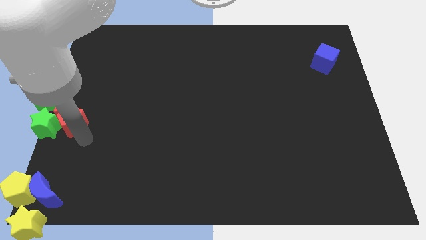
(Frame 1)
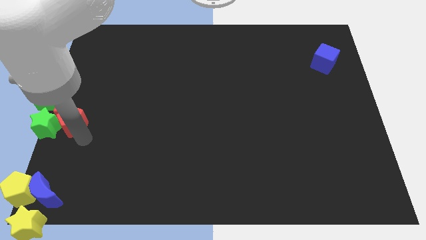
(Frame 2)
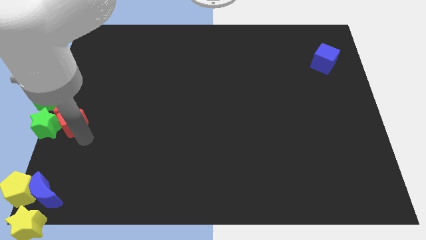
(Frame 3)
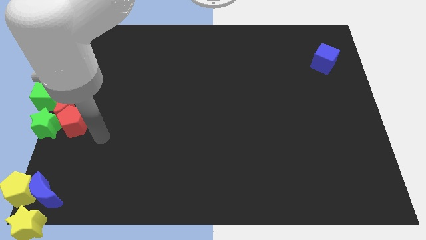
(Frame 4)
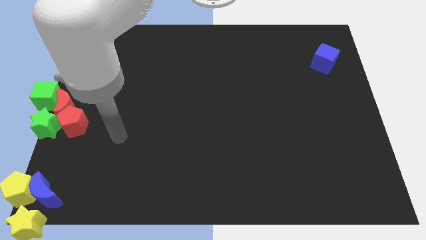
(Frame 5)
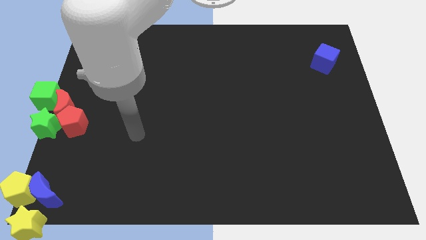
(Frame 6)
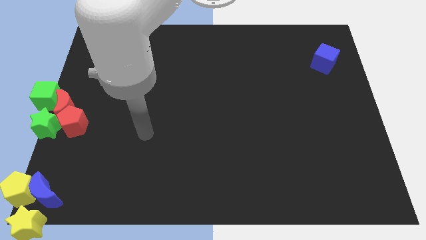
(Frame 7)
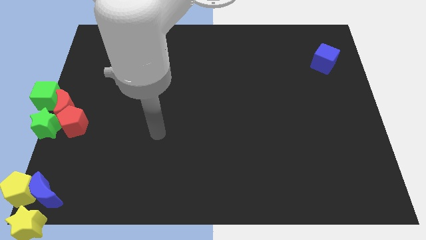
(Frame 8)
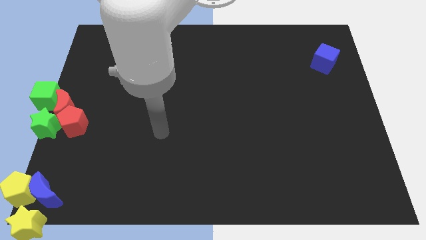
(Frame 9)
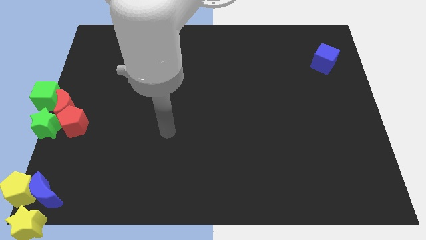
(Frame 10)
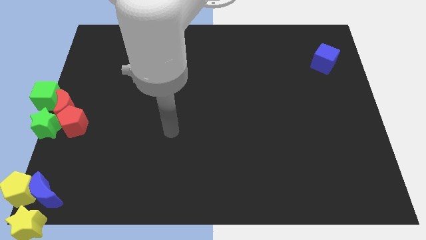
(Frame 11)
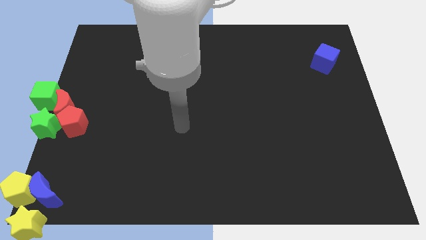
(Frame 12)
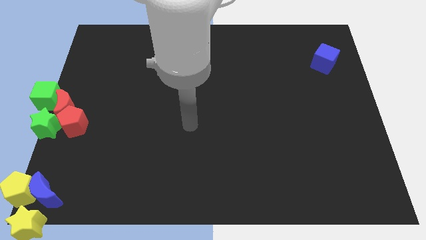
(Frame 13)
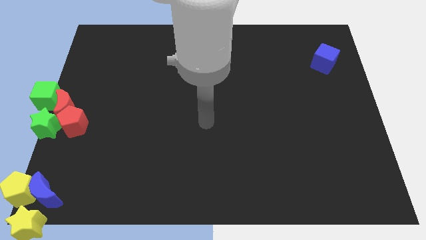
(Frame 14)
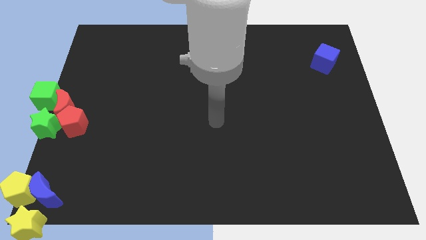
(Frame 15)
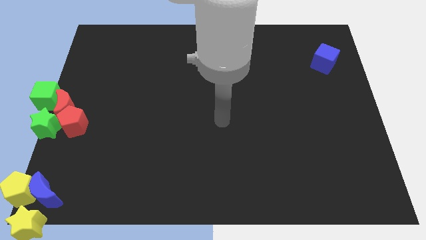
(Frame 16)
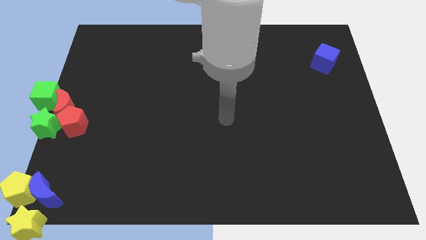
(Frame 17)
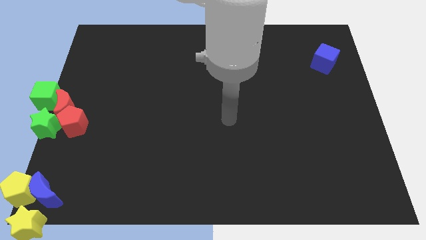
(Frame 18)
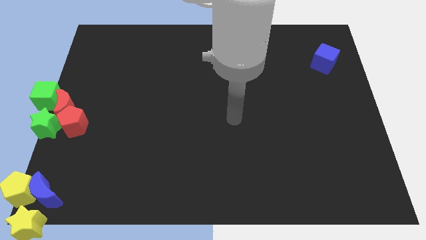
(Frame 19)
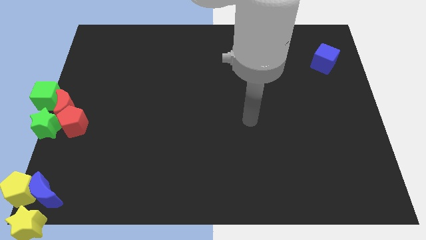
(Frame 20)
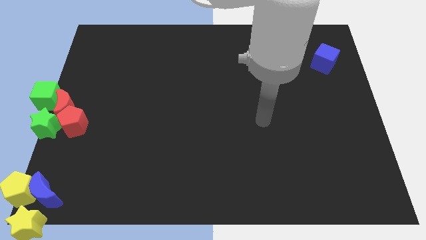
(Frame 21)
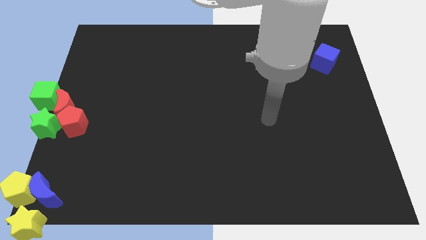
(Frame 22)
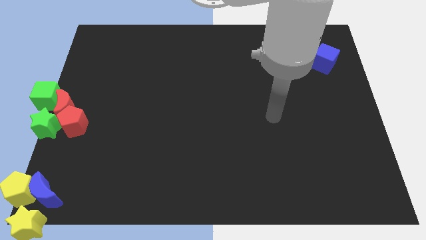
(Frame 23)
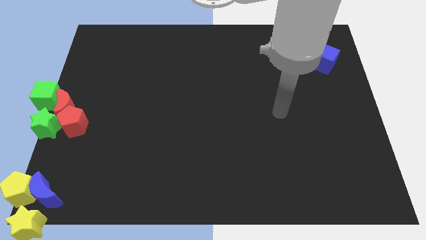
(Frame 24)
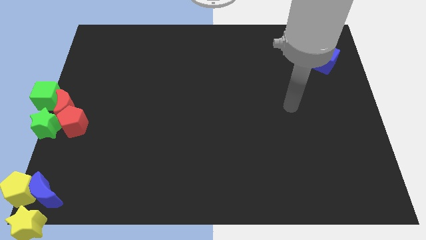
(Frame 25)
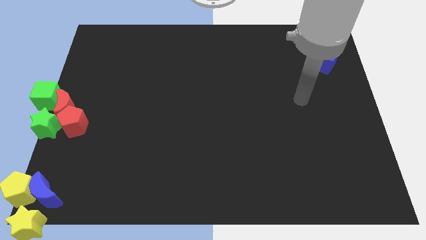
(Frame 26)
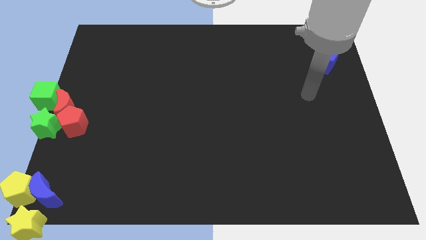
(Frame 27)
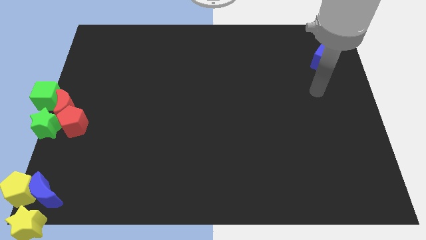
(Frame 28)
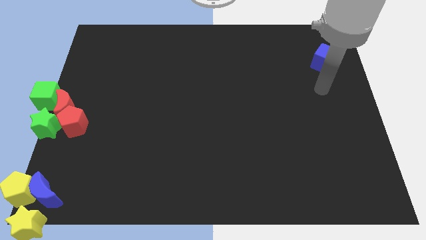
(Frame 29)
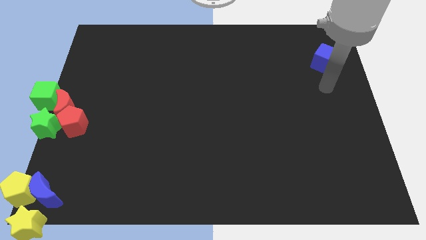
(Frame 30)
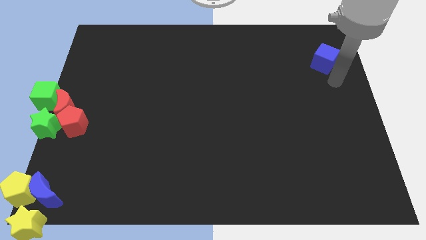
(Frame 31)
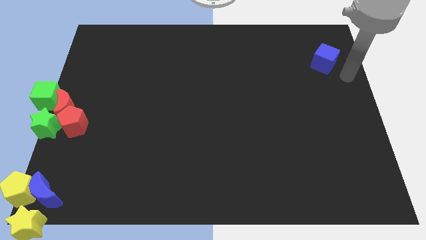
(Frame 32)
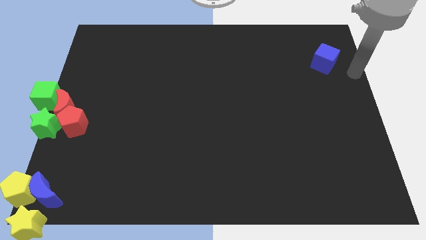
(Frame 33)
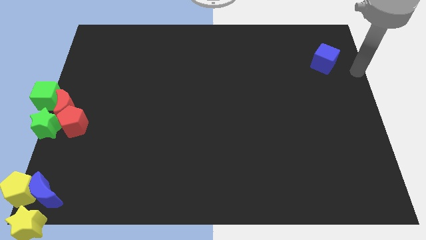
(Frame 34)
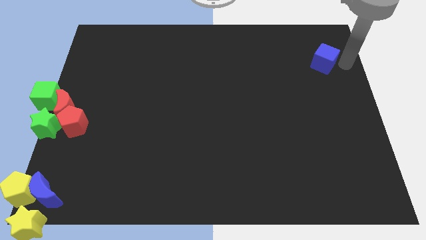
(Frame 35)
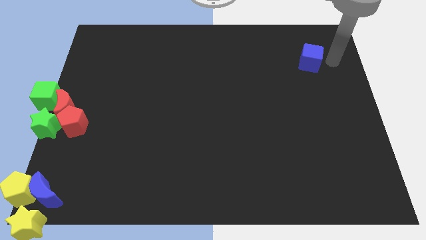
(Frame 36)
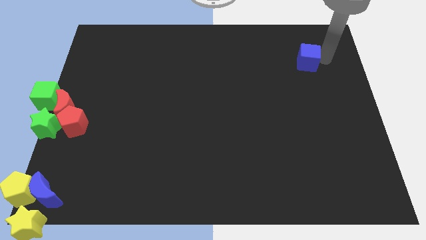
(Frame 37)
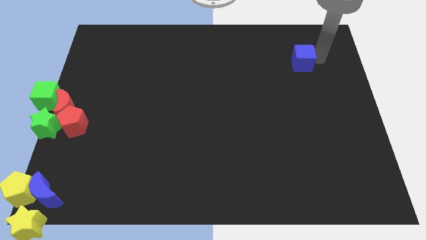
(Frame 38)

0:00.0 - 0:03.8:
move your arm near the blue cube

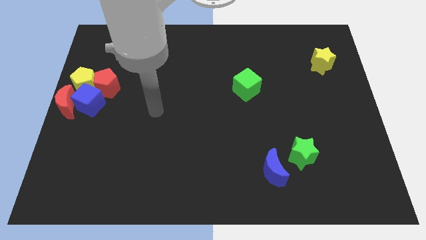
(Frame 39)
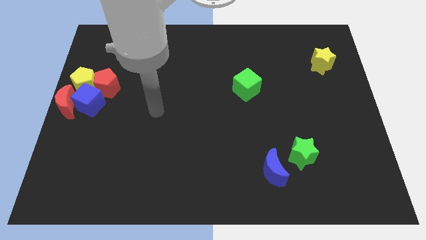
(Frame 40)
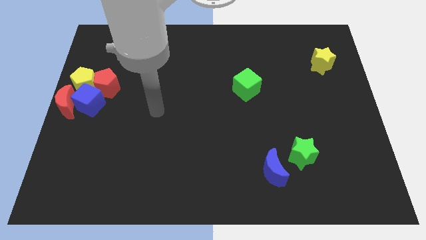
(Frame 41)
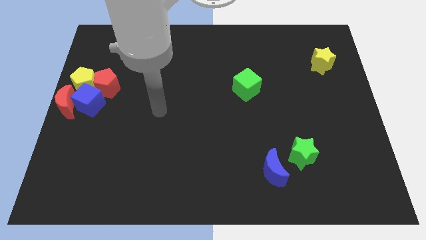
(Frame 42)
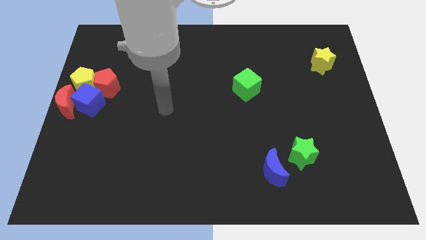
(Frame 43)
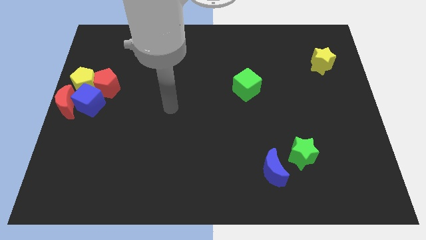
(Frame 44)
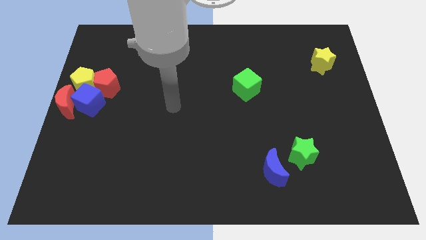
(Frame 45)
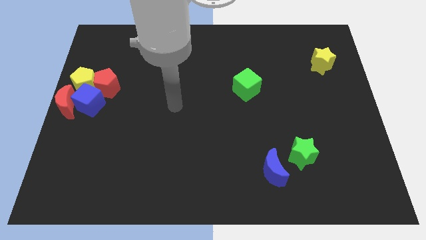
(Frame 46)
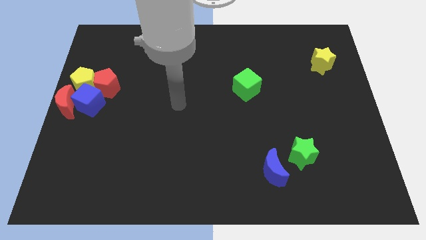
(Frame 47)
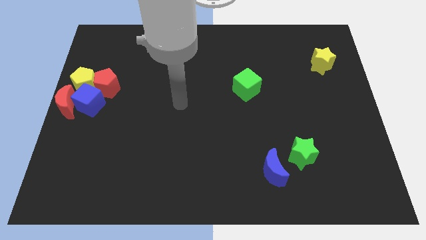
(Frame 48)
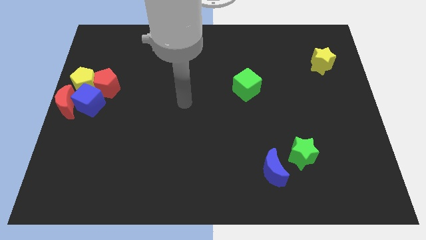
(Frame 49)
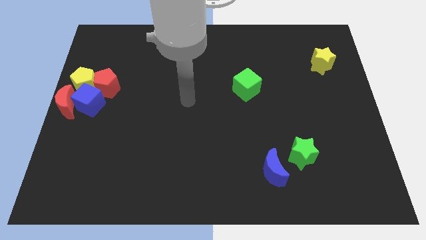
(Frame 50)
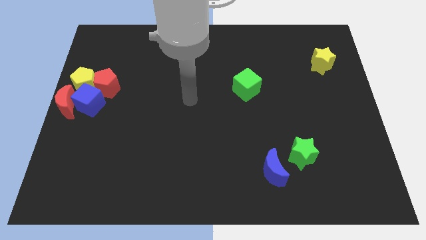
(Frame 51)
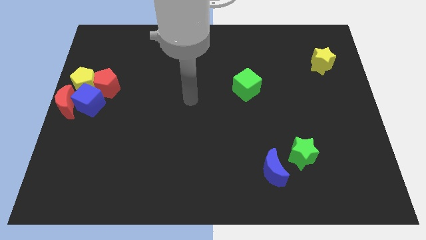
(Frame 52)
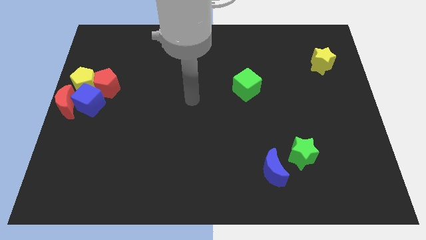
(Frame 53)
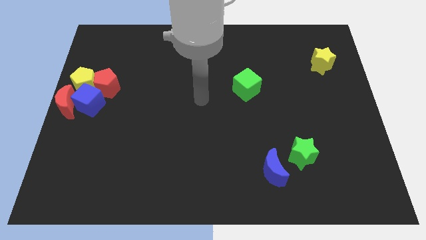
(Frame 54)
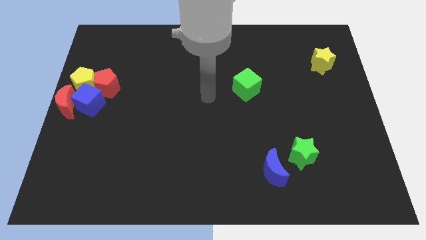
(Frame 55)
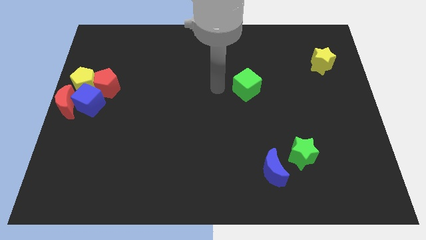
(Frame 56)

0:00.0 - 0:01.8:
move the arm to the center of the board

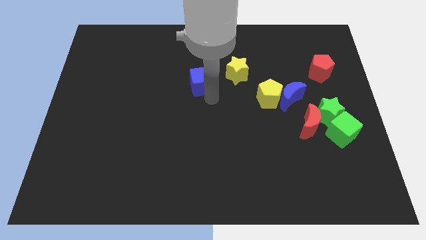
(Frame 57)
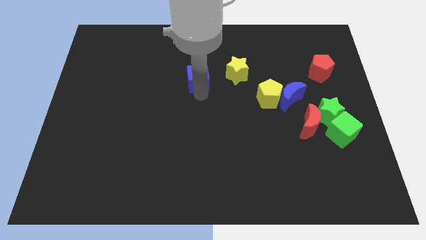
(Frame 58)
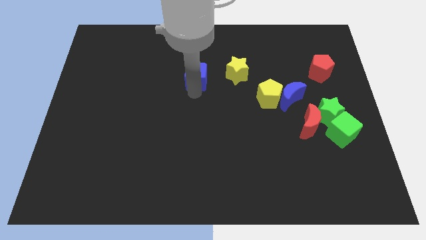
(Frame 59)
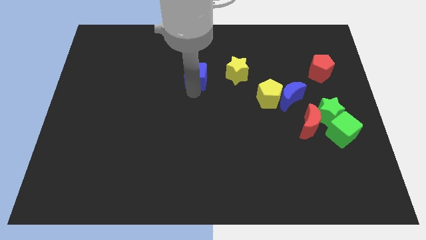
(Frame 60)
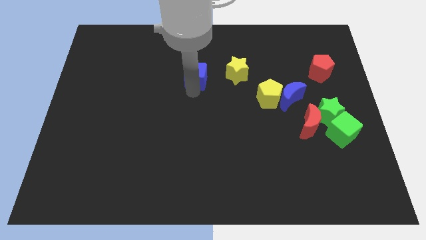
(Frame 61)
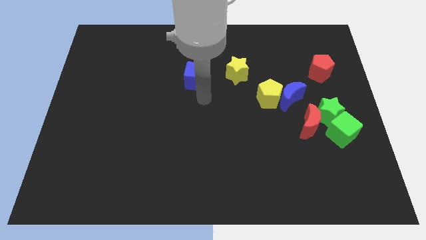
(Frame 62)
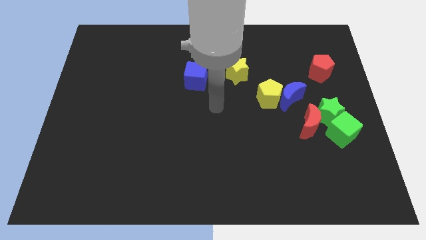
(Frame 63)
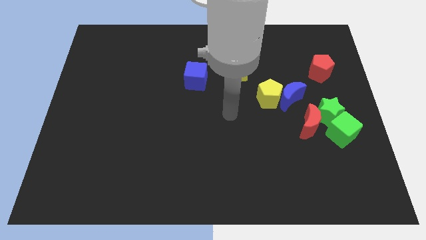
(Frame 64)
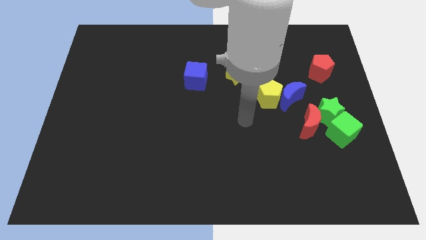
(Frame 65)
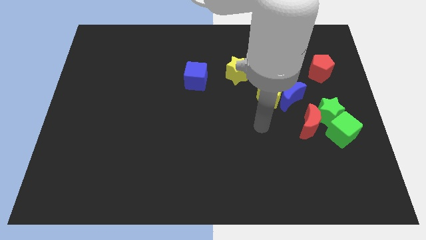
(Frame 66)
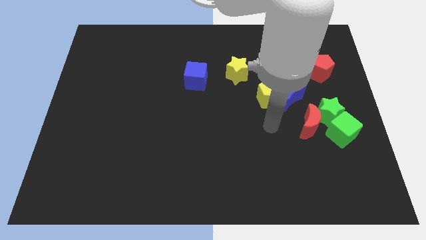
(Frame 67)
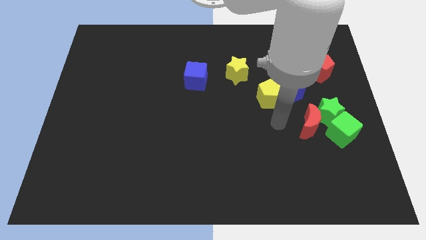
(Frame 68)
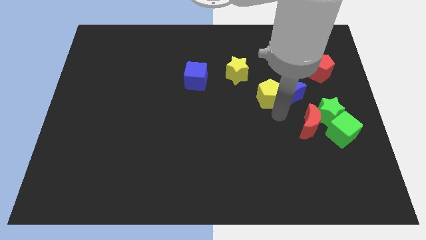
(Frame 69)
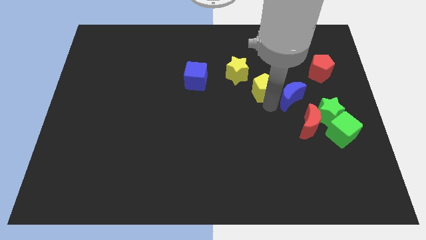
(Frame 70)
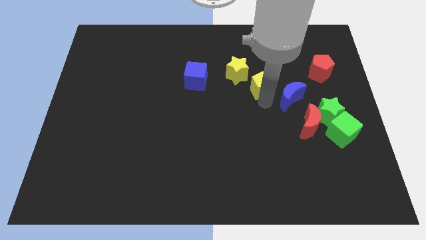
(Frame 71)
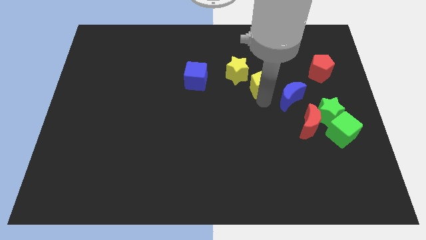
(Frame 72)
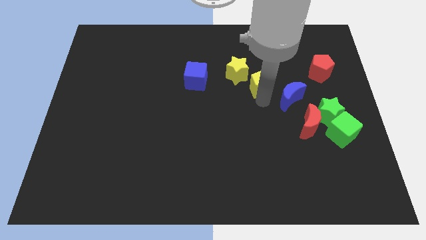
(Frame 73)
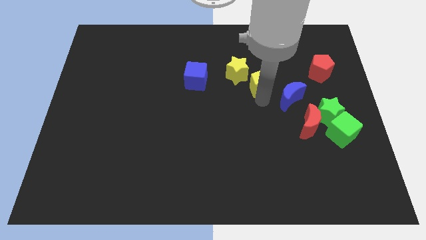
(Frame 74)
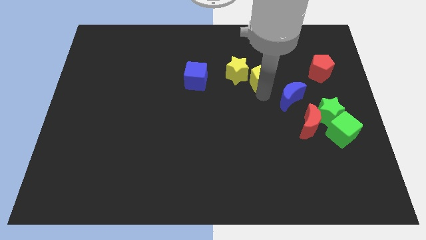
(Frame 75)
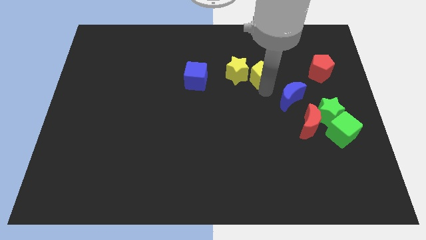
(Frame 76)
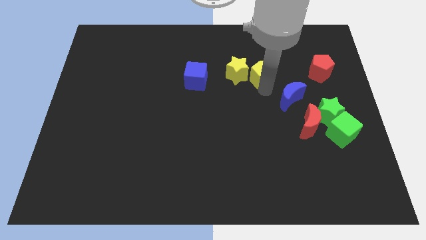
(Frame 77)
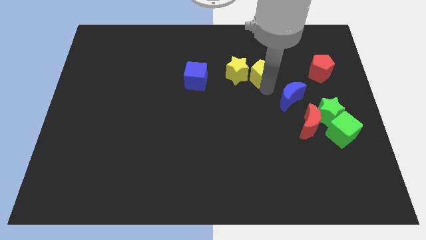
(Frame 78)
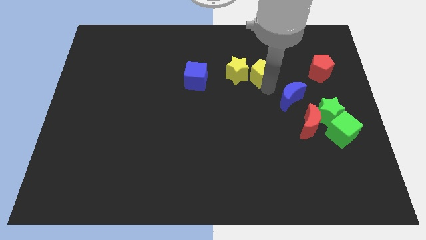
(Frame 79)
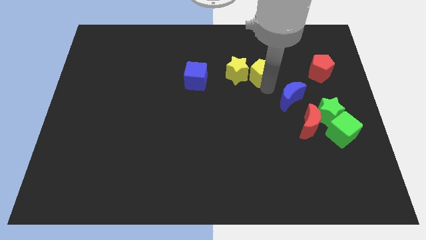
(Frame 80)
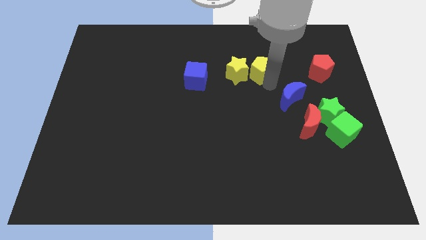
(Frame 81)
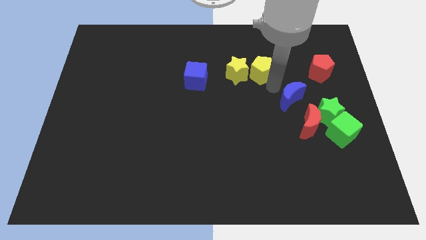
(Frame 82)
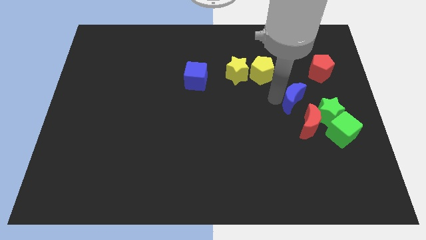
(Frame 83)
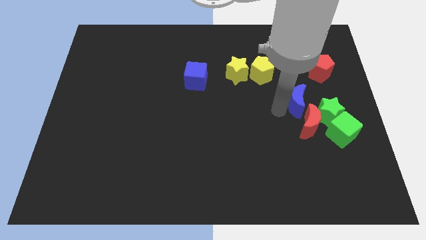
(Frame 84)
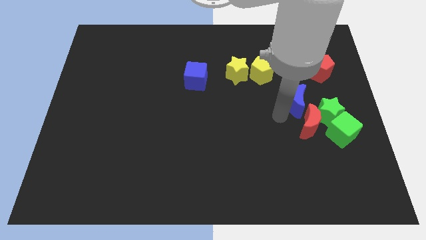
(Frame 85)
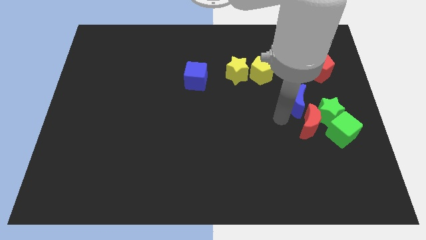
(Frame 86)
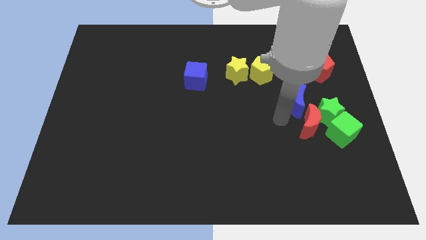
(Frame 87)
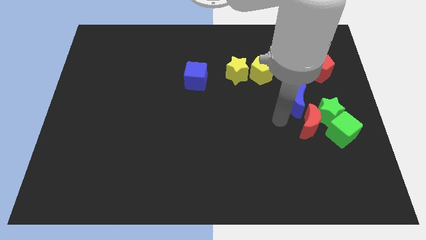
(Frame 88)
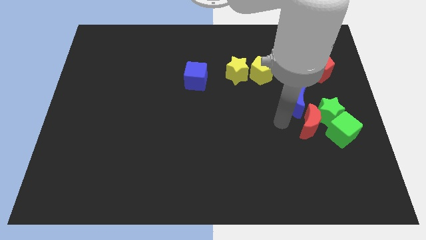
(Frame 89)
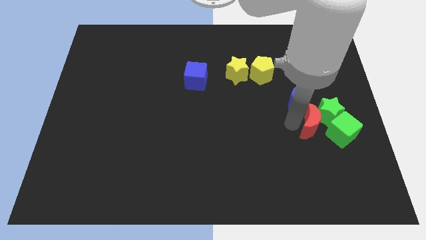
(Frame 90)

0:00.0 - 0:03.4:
place the yellow pentagon horizontally left of the red pentagon
